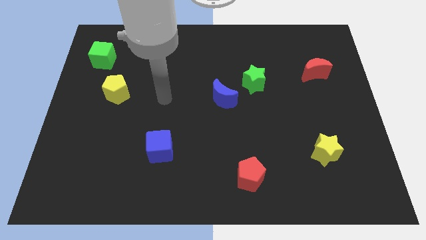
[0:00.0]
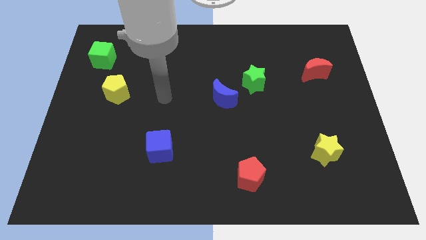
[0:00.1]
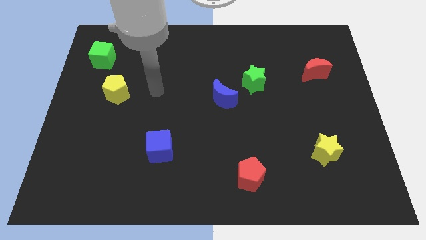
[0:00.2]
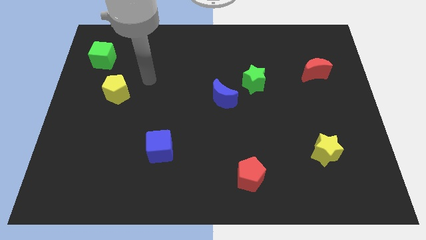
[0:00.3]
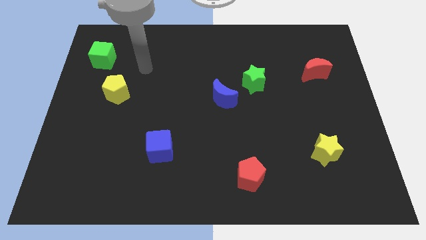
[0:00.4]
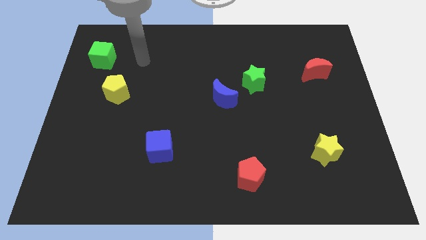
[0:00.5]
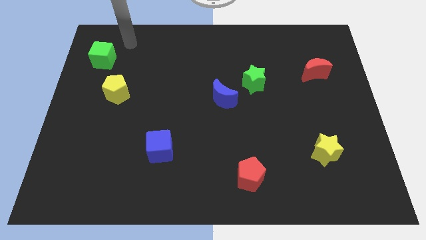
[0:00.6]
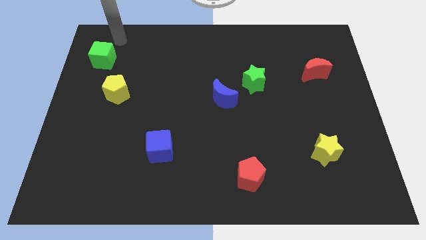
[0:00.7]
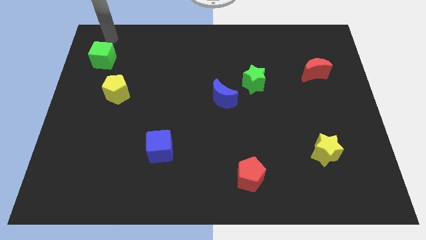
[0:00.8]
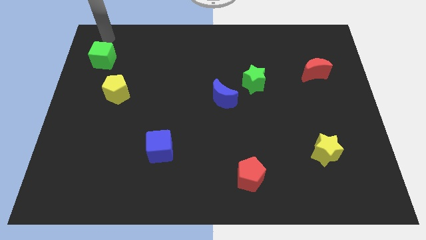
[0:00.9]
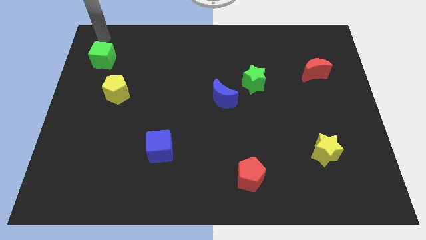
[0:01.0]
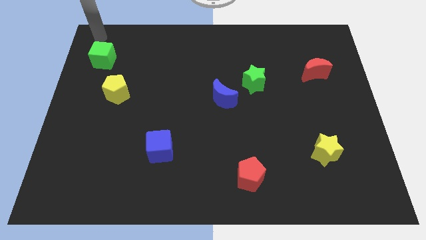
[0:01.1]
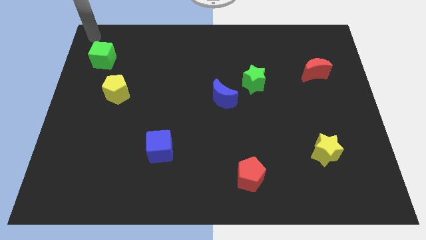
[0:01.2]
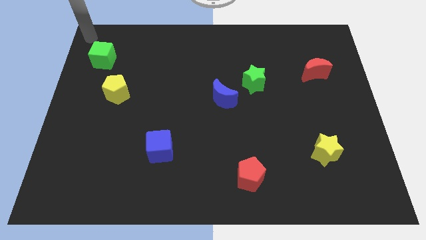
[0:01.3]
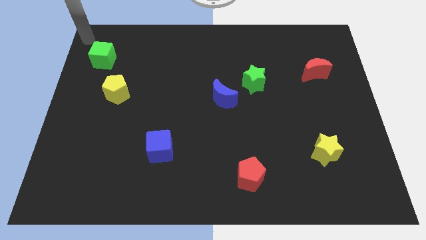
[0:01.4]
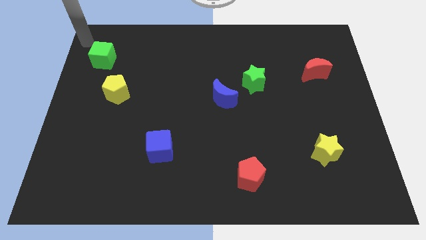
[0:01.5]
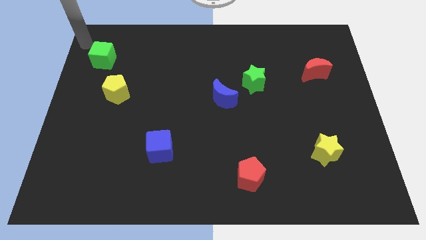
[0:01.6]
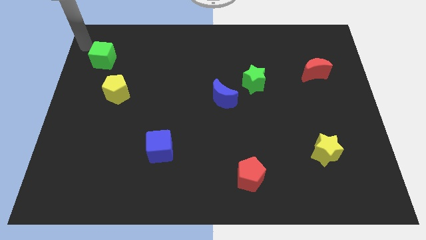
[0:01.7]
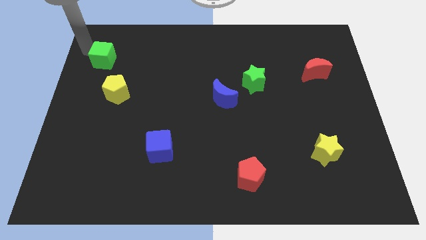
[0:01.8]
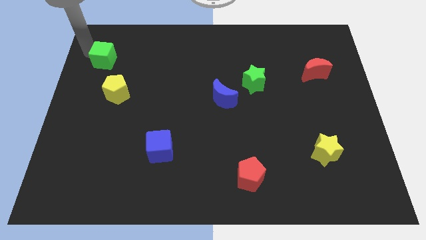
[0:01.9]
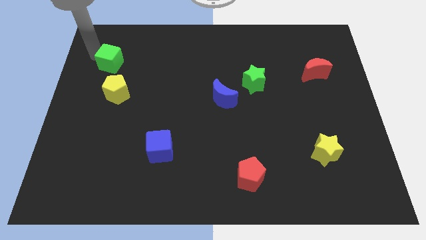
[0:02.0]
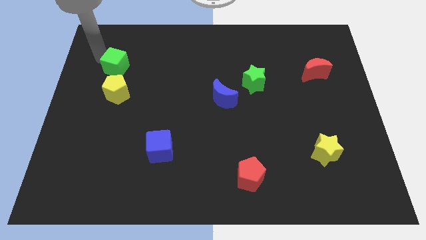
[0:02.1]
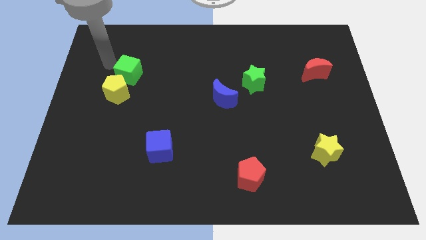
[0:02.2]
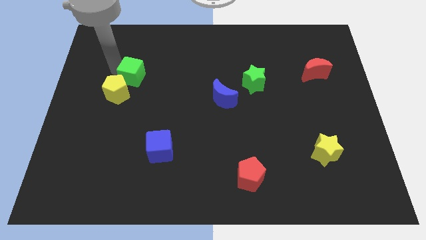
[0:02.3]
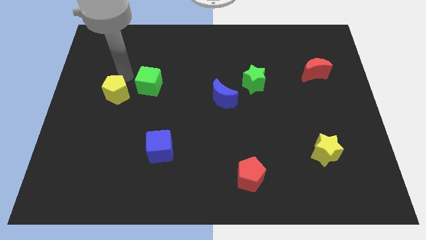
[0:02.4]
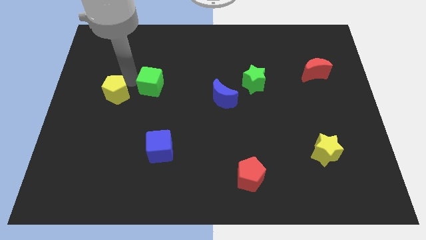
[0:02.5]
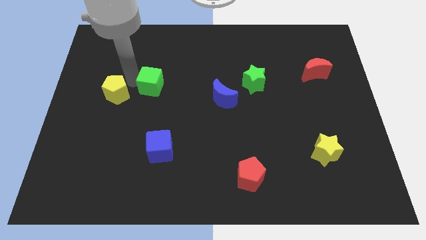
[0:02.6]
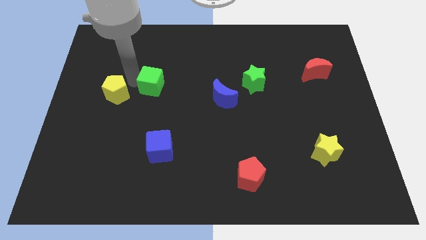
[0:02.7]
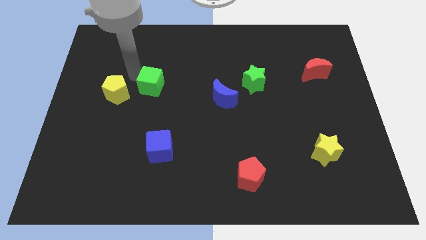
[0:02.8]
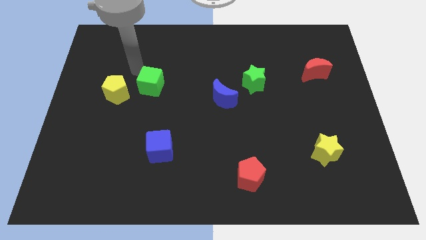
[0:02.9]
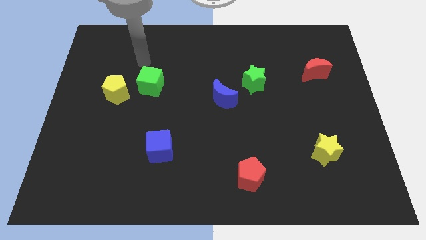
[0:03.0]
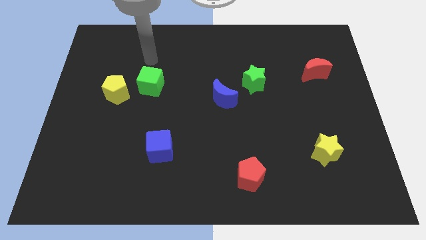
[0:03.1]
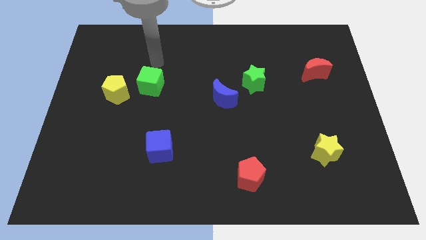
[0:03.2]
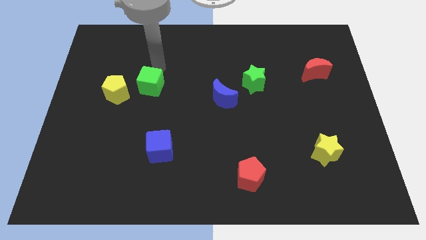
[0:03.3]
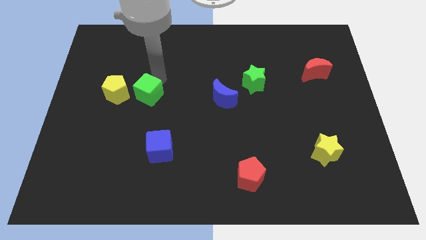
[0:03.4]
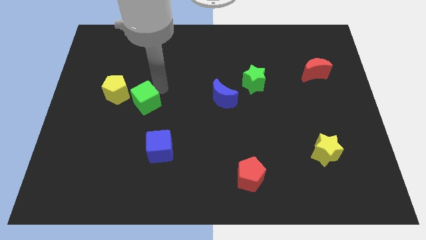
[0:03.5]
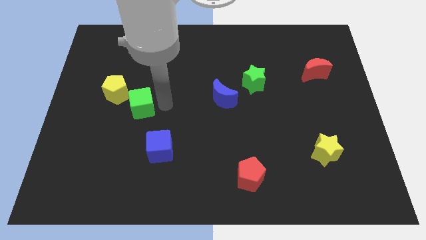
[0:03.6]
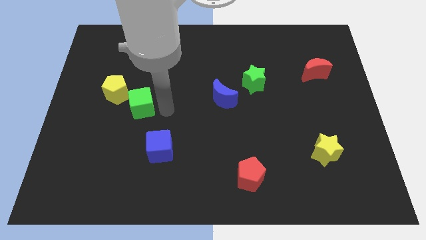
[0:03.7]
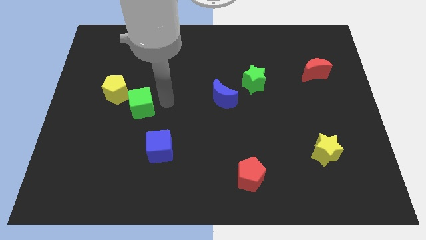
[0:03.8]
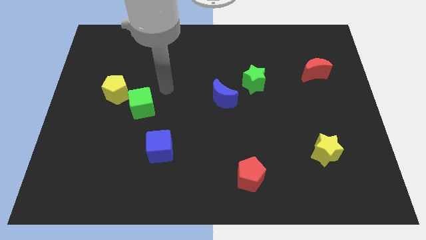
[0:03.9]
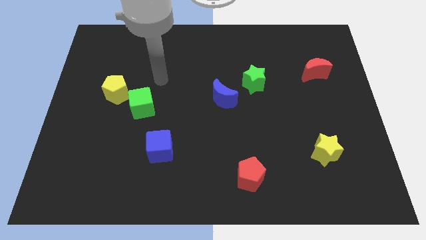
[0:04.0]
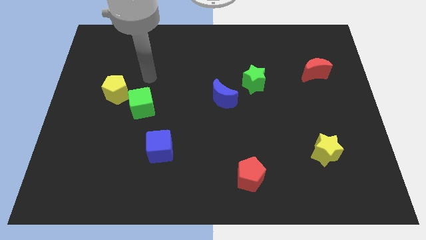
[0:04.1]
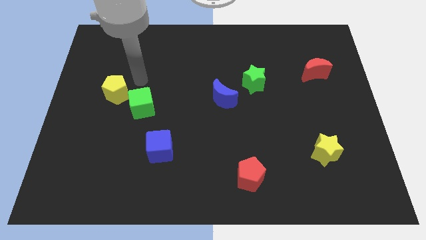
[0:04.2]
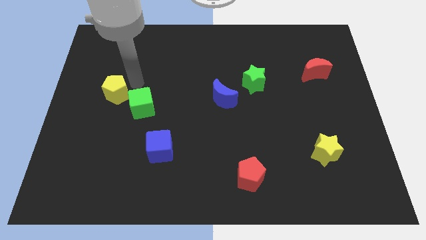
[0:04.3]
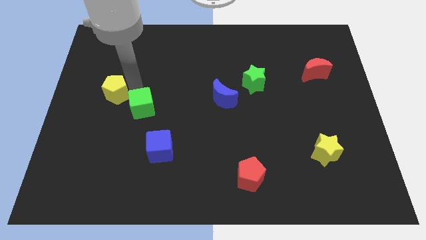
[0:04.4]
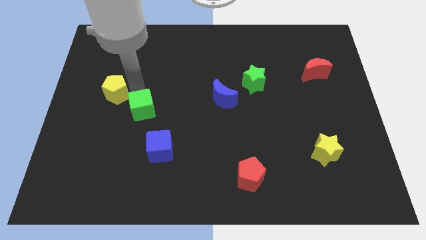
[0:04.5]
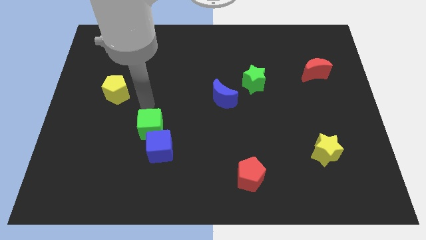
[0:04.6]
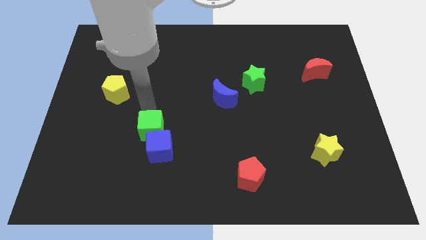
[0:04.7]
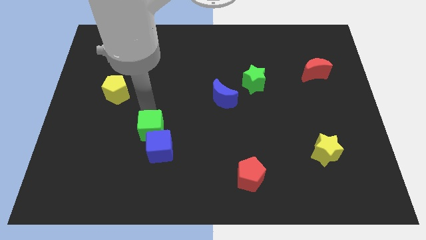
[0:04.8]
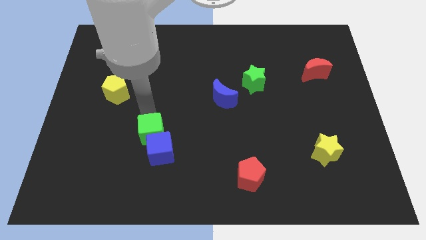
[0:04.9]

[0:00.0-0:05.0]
push the green cube next to the blue cube

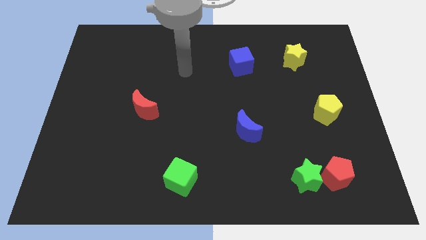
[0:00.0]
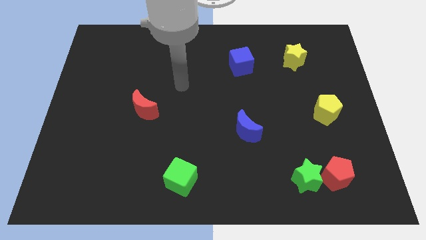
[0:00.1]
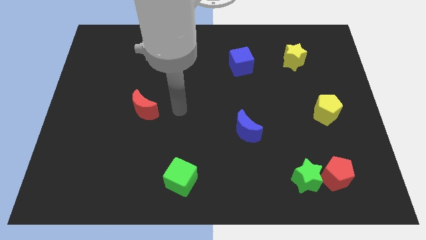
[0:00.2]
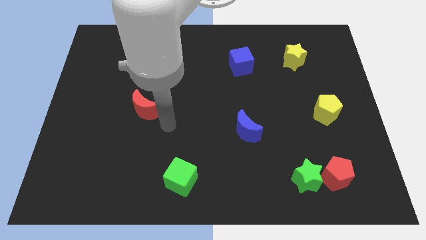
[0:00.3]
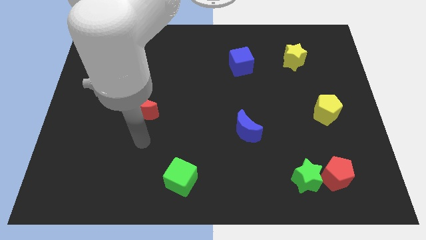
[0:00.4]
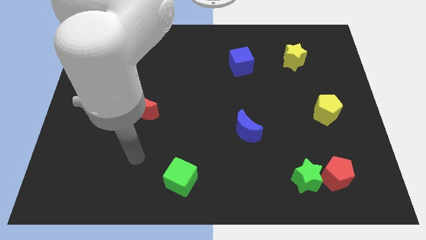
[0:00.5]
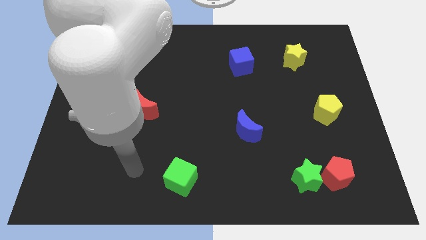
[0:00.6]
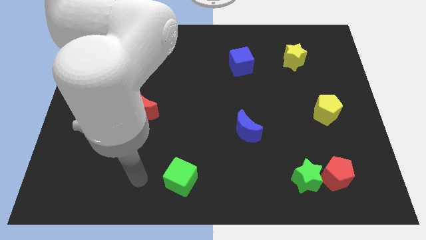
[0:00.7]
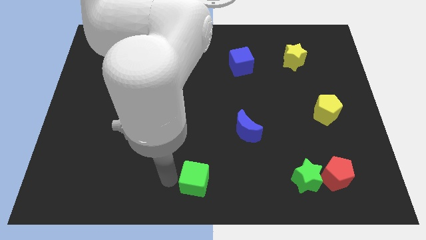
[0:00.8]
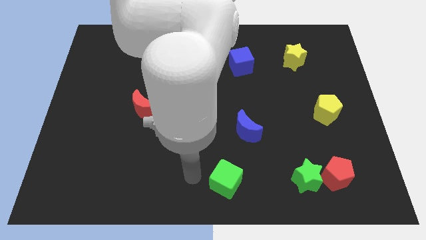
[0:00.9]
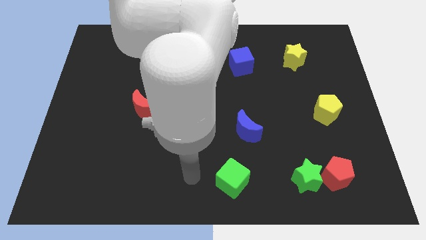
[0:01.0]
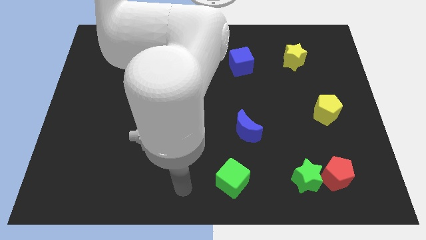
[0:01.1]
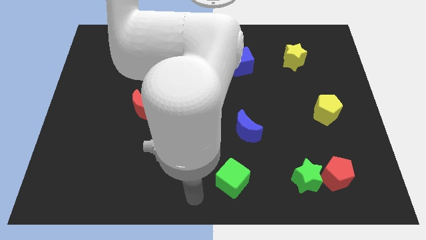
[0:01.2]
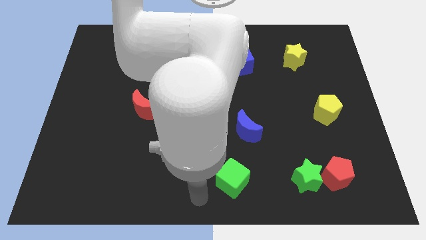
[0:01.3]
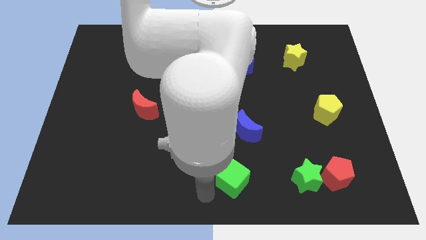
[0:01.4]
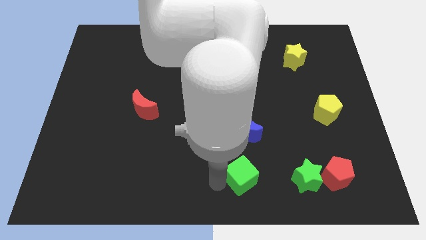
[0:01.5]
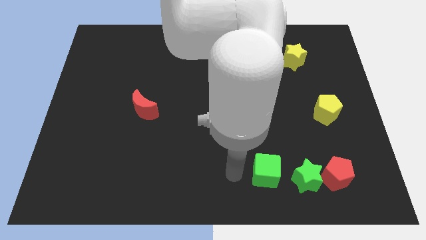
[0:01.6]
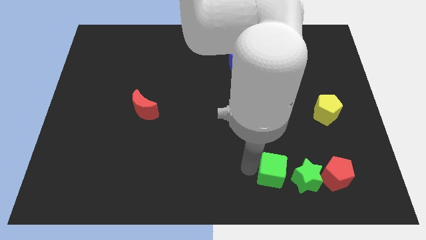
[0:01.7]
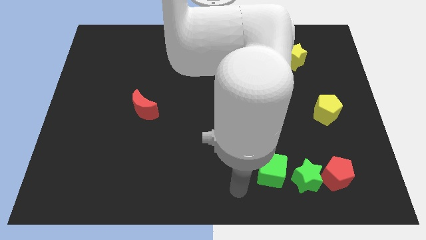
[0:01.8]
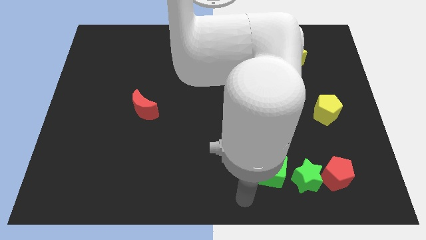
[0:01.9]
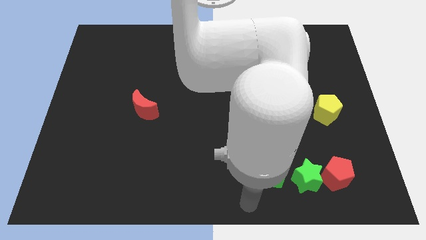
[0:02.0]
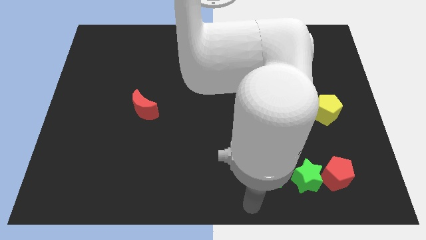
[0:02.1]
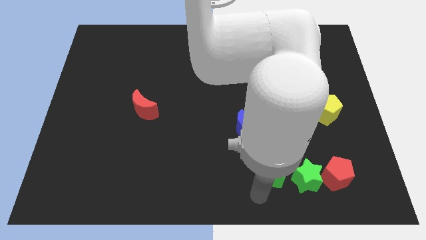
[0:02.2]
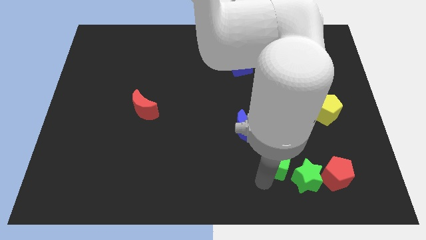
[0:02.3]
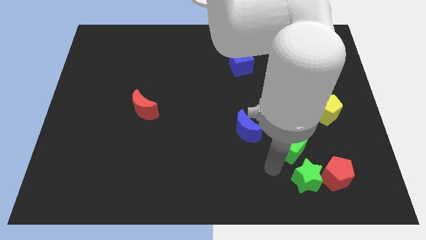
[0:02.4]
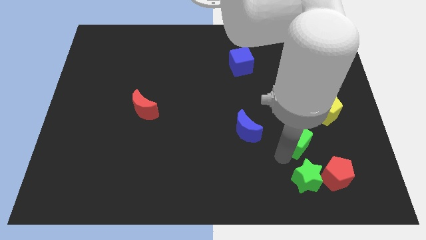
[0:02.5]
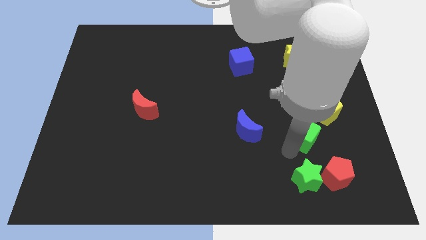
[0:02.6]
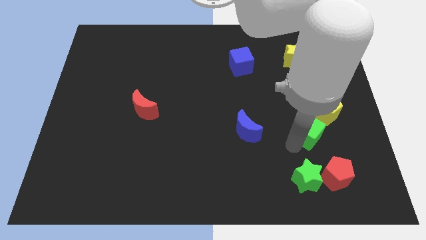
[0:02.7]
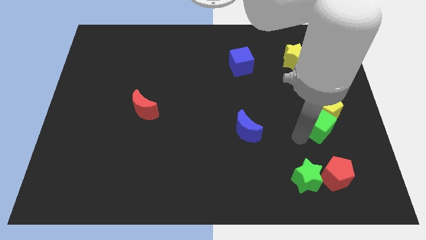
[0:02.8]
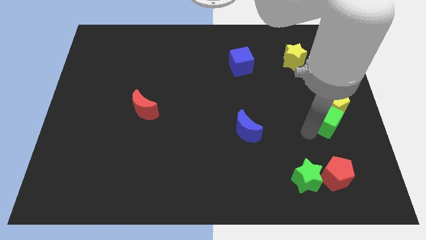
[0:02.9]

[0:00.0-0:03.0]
slide the green cube next to the yellow pentagon
